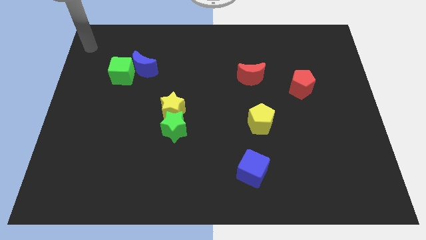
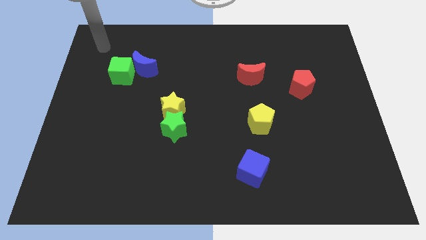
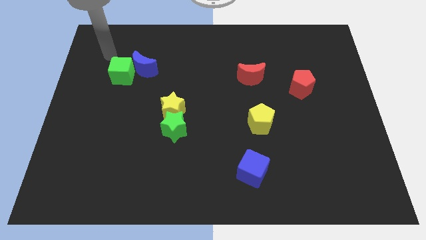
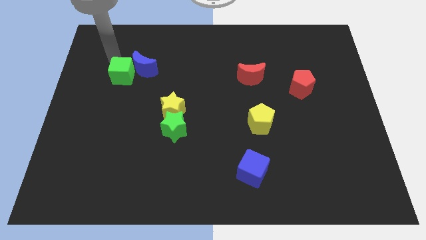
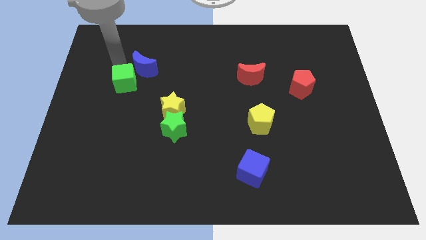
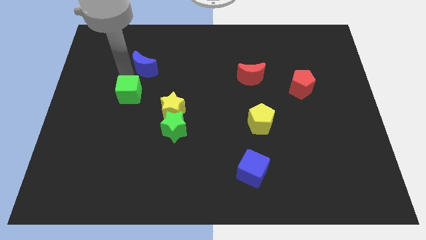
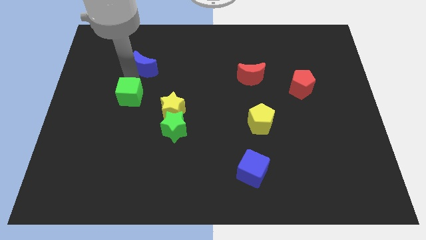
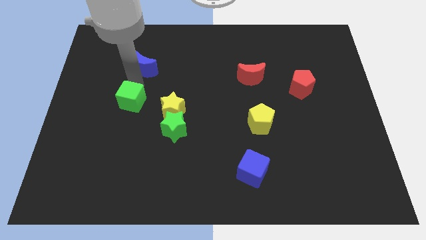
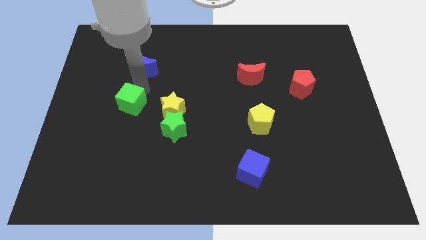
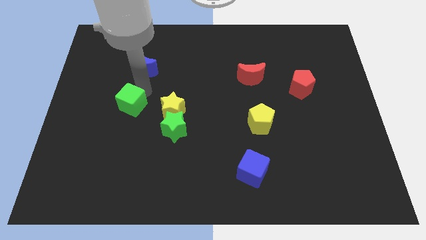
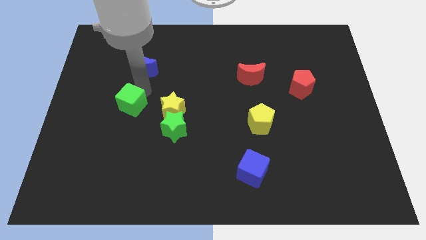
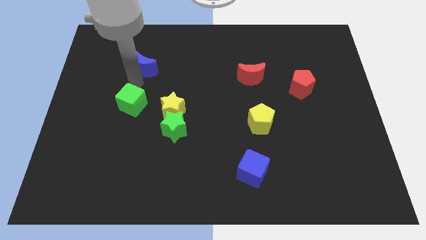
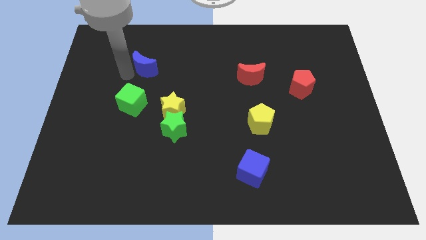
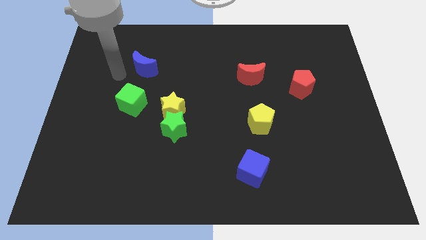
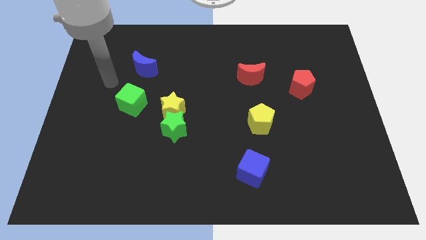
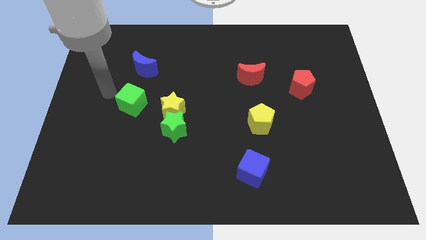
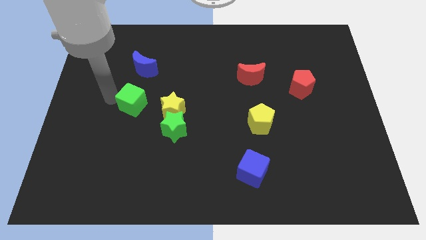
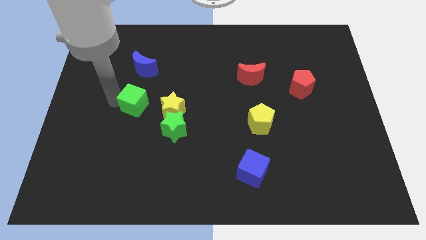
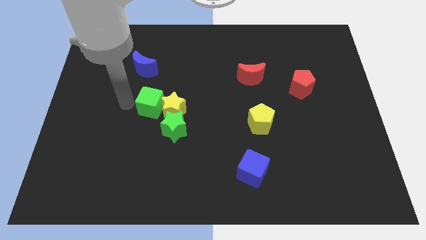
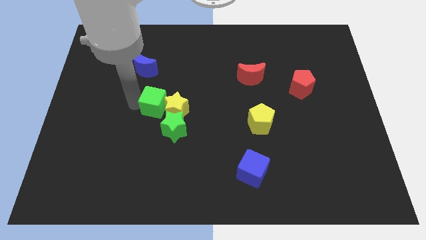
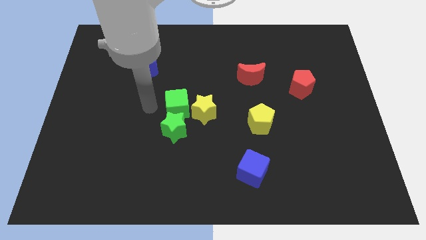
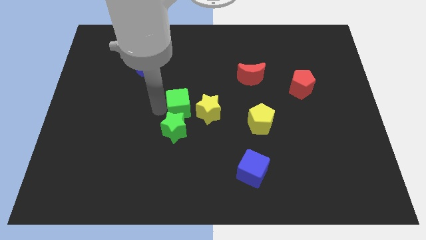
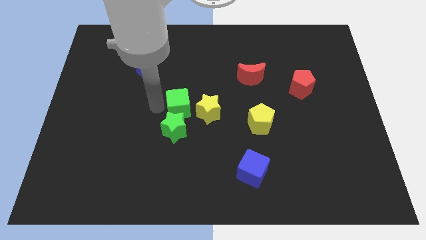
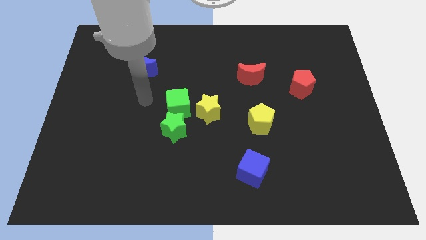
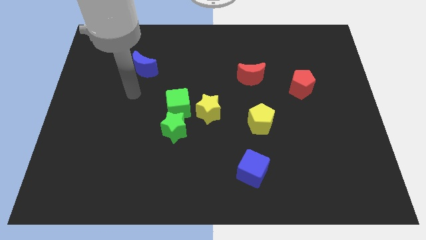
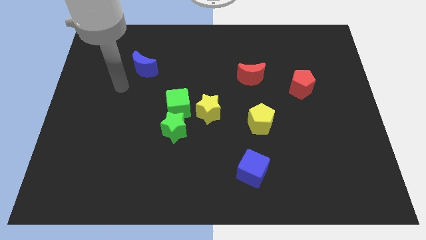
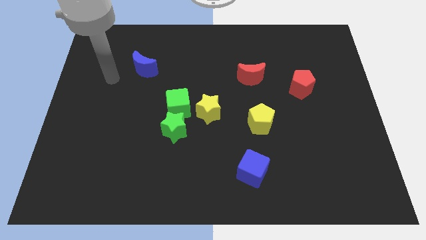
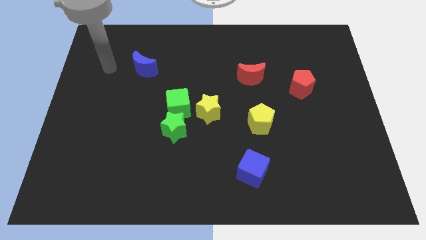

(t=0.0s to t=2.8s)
move the green cube above the green star

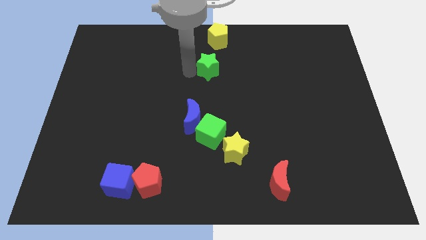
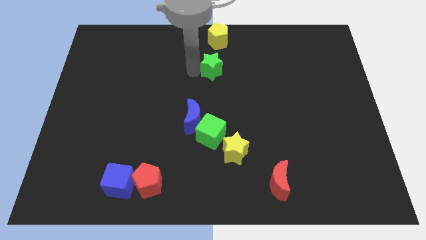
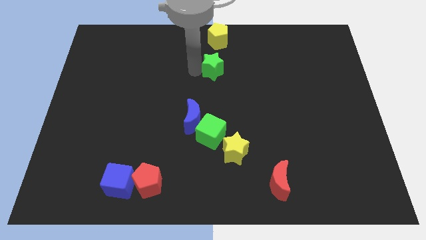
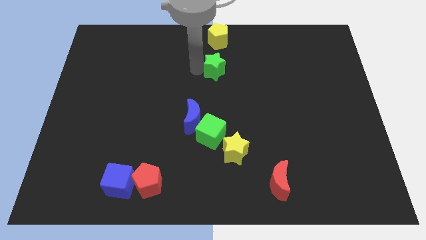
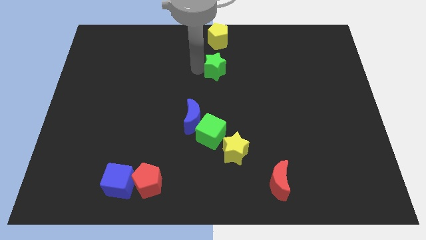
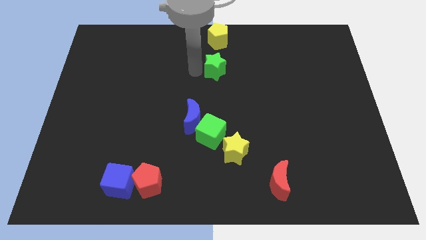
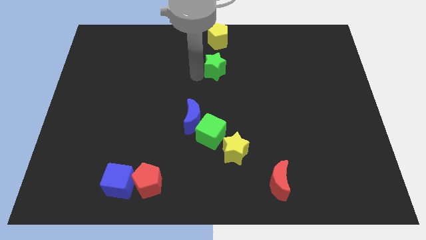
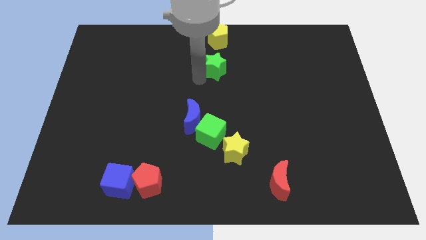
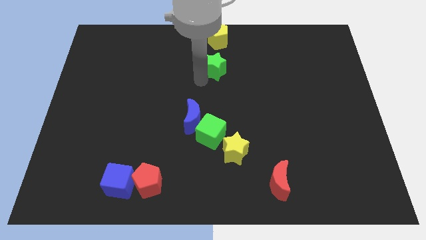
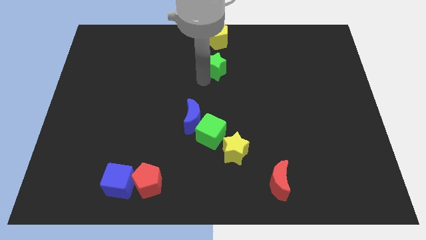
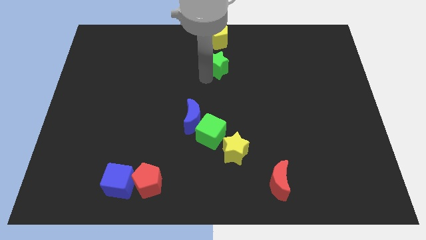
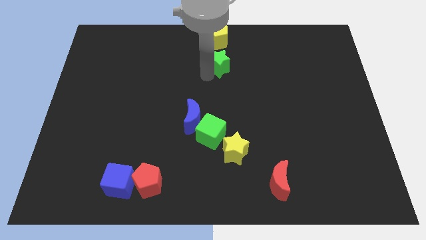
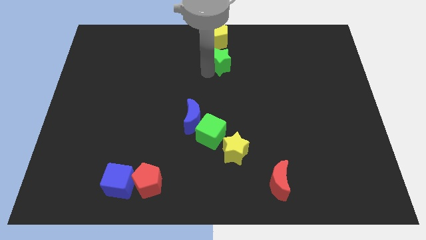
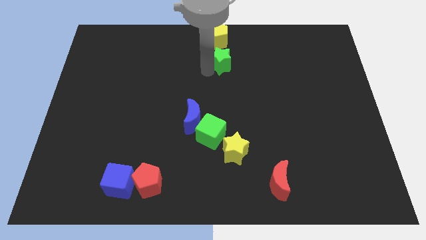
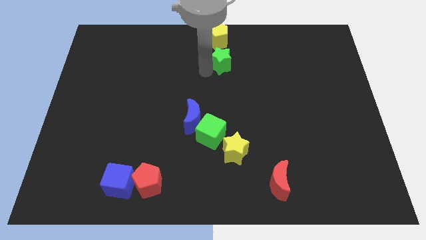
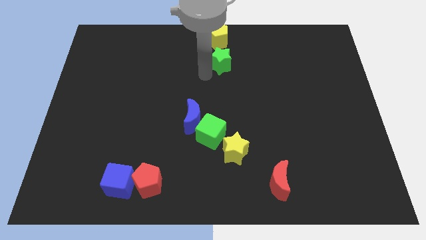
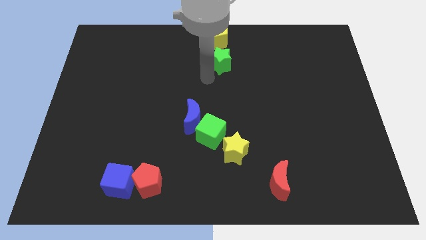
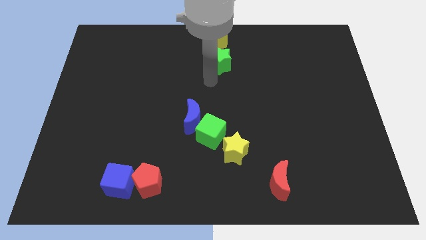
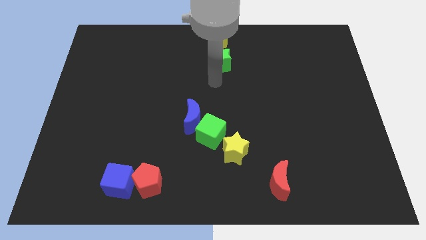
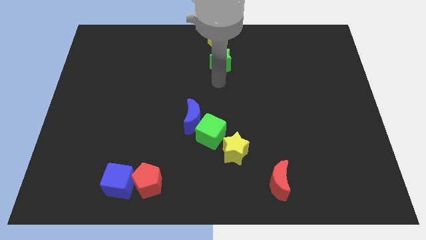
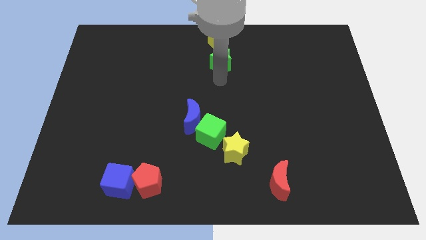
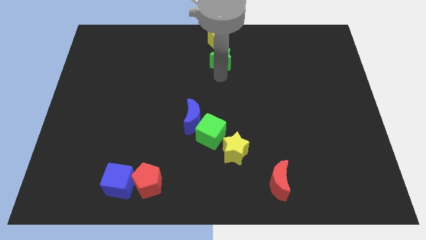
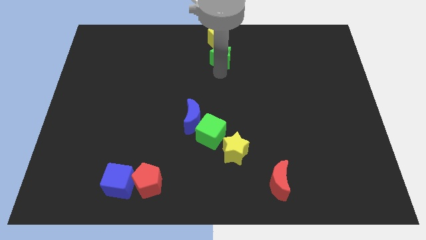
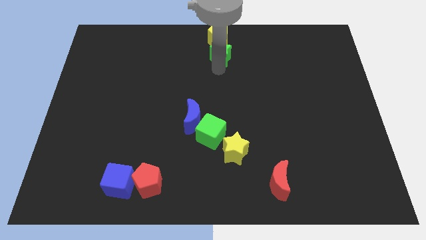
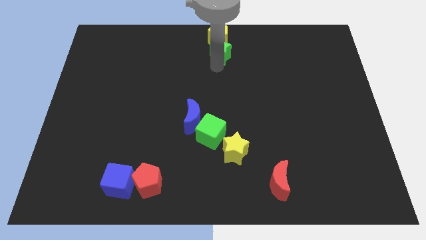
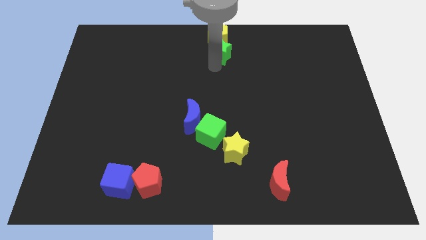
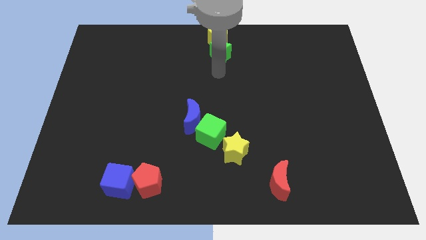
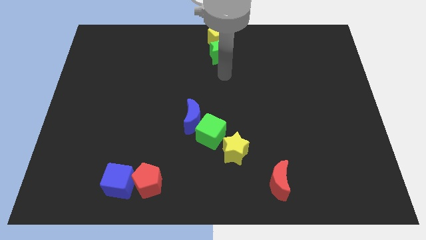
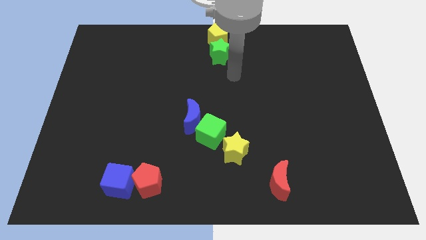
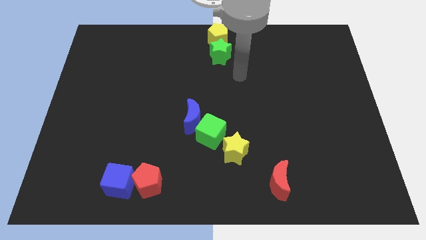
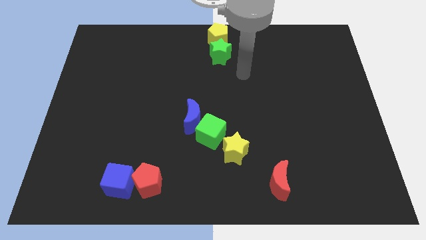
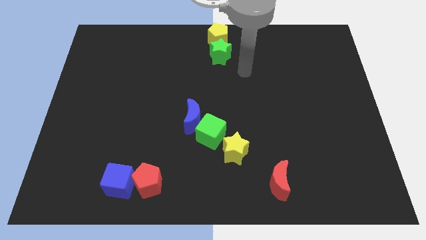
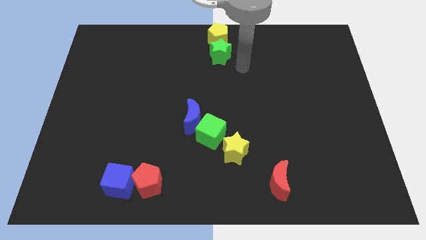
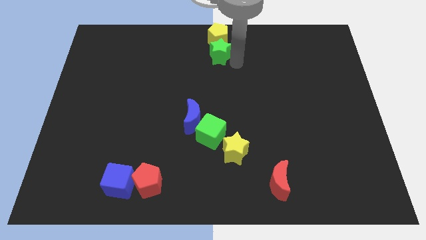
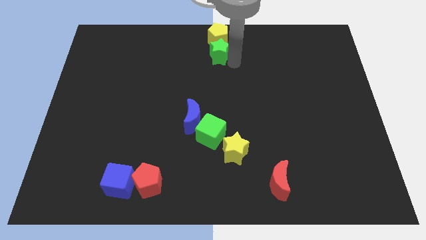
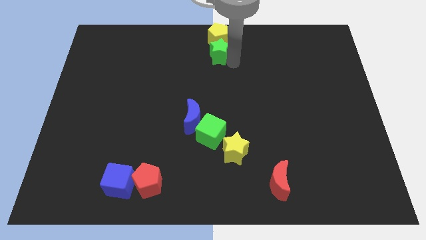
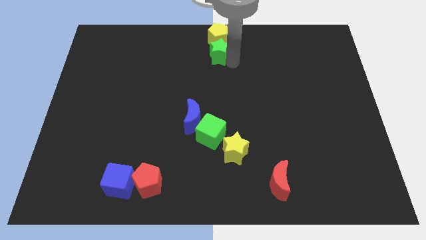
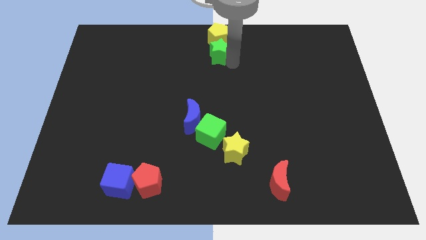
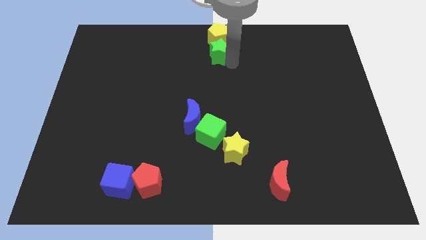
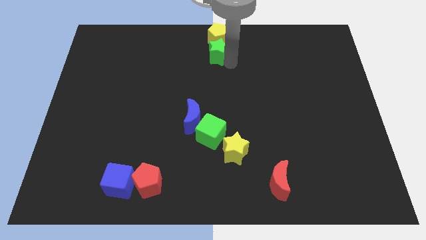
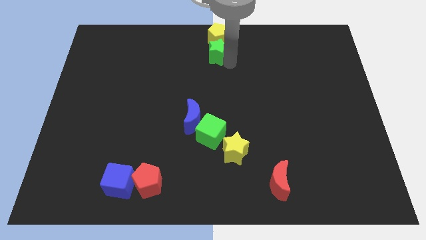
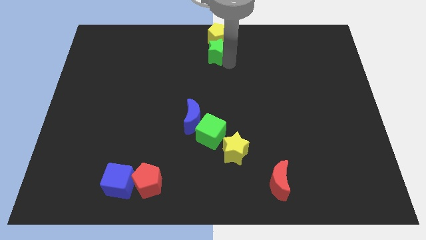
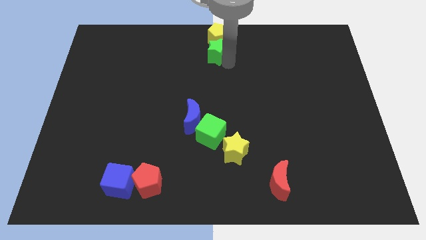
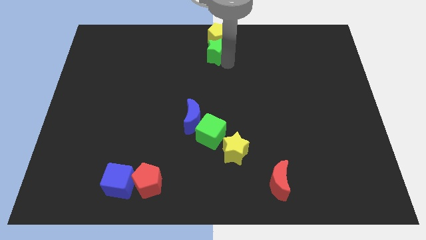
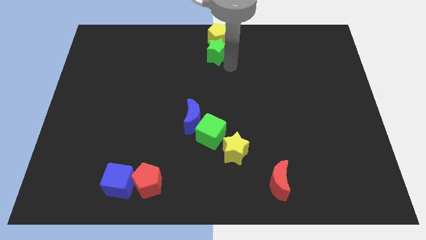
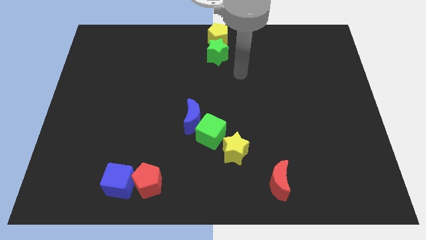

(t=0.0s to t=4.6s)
adjust the green star below into the yellow pentagon

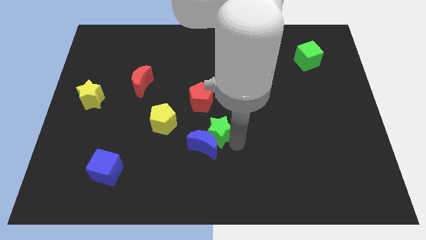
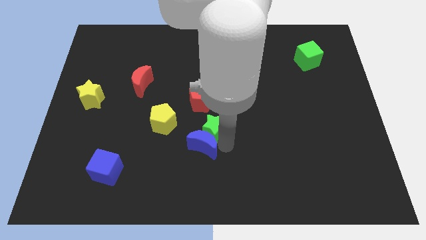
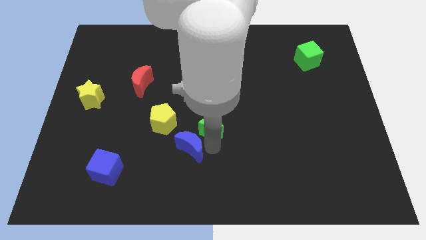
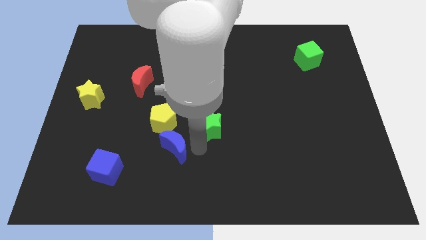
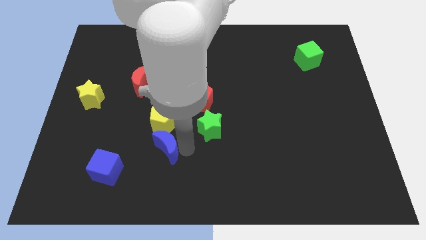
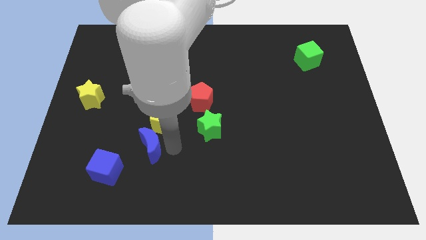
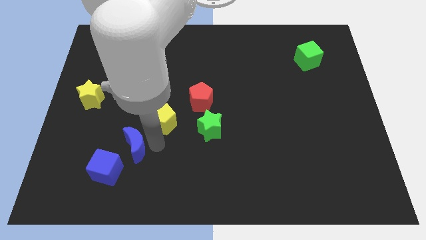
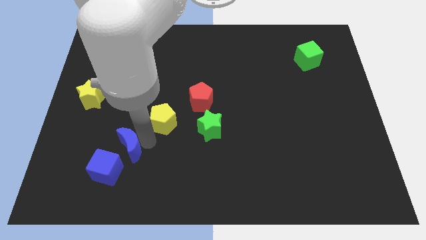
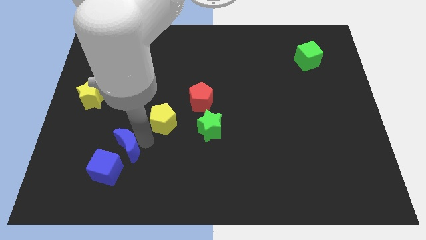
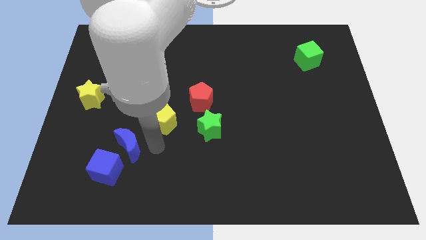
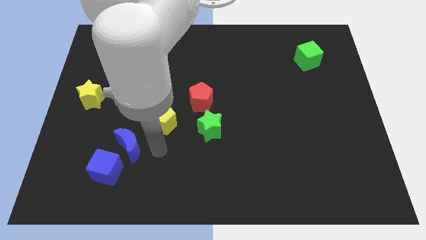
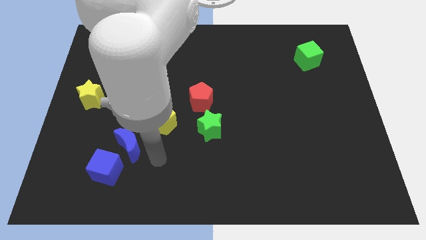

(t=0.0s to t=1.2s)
separate blue moon from green star

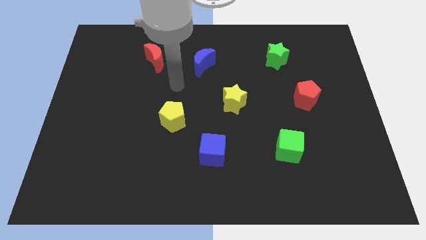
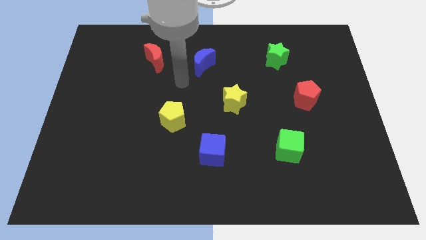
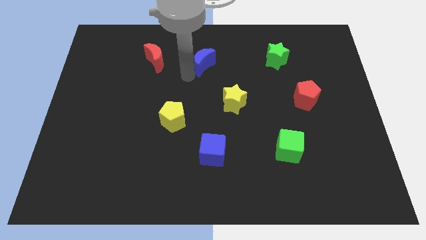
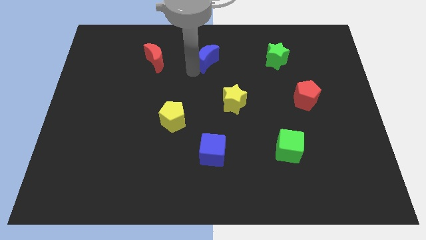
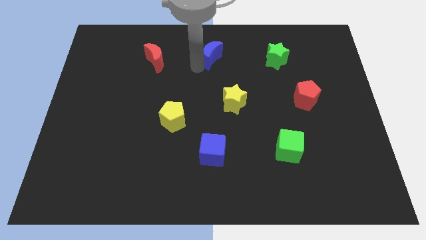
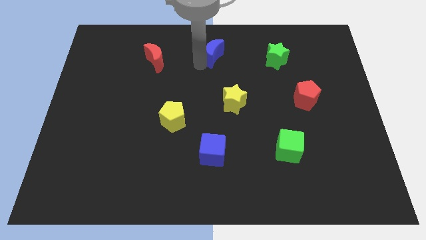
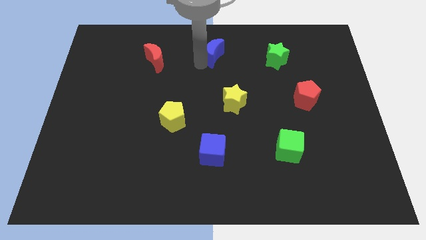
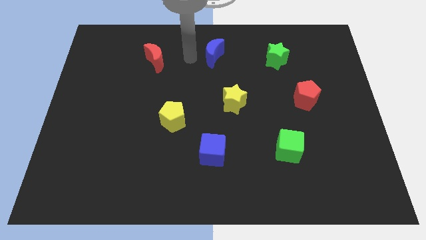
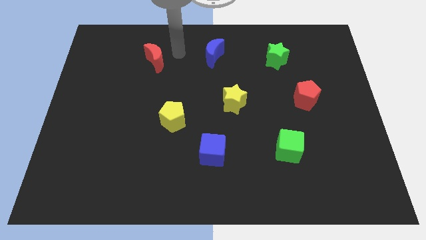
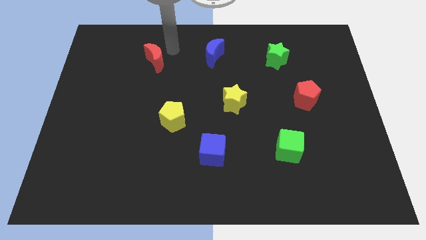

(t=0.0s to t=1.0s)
move the blue crescent slightly to the top right of the board
